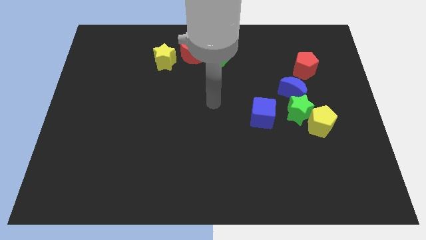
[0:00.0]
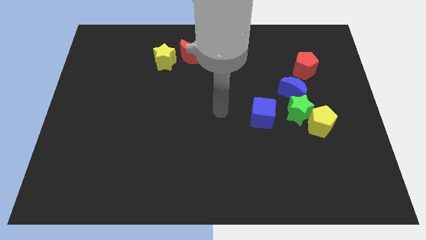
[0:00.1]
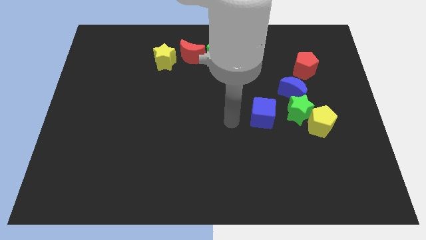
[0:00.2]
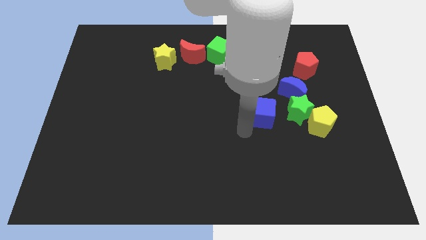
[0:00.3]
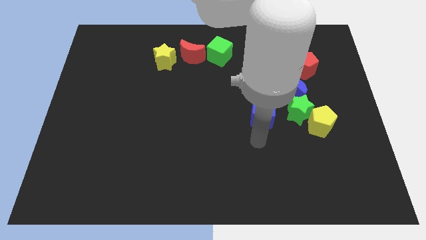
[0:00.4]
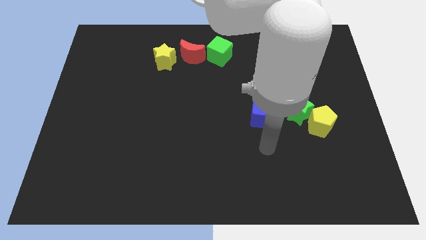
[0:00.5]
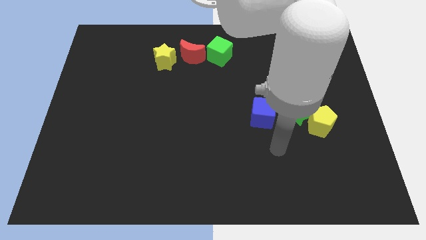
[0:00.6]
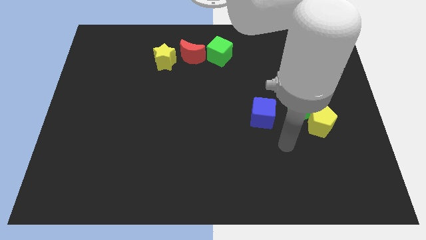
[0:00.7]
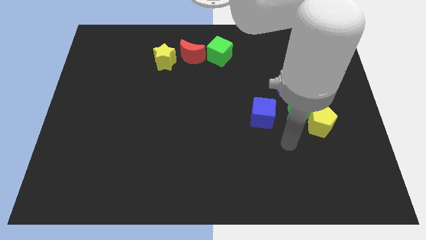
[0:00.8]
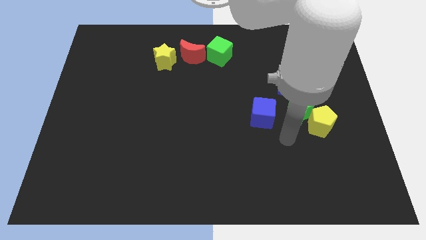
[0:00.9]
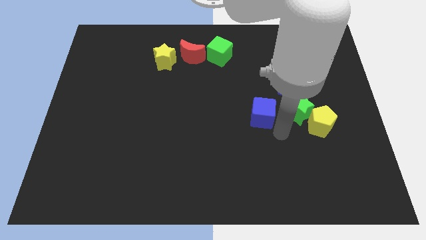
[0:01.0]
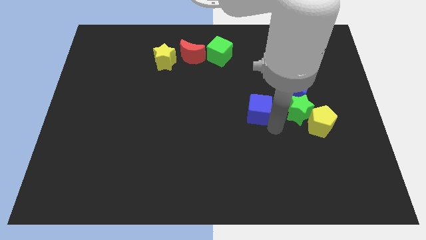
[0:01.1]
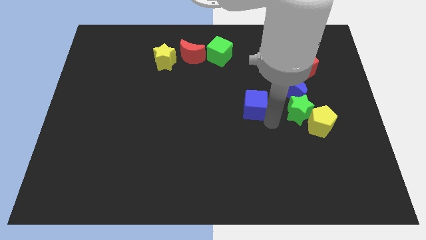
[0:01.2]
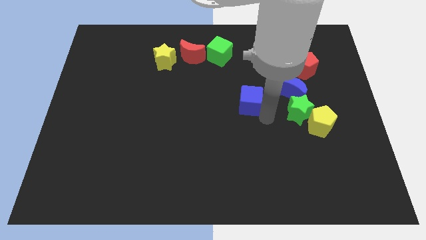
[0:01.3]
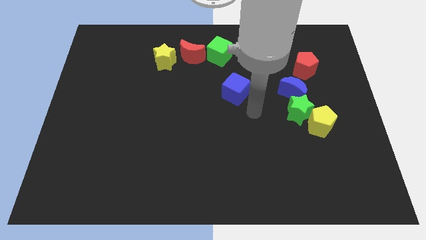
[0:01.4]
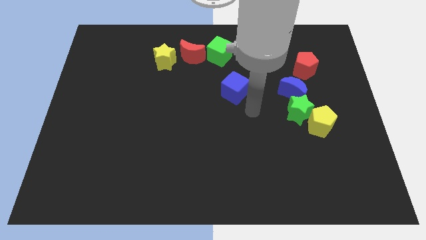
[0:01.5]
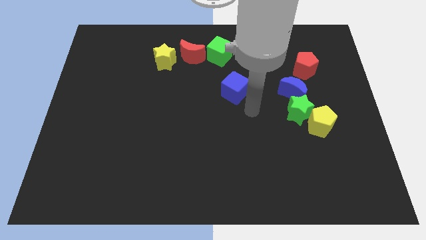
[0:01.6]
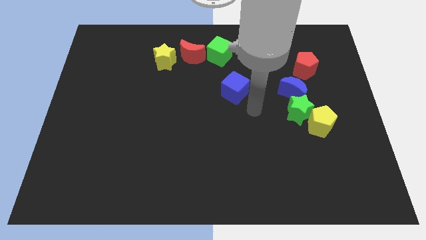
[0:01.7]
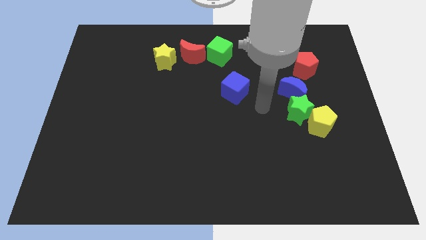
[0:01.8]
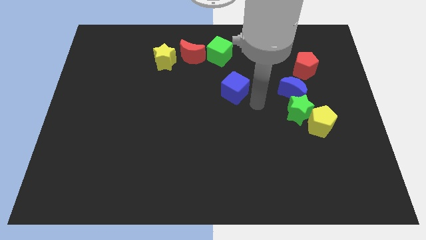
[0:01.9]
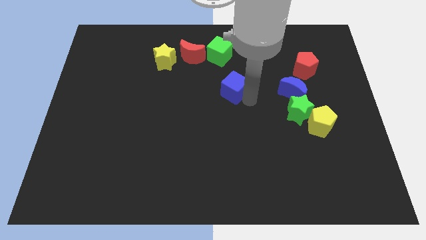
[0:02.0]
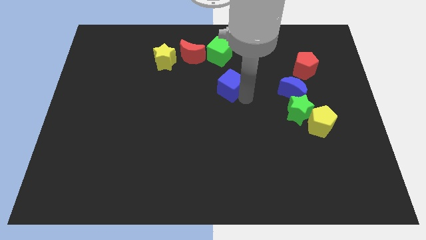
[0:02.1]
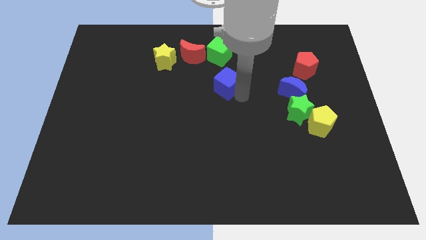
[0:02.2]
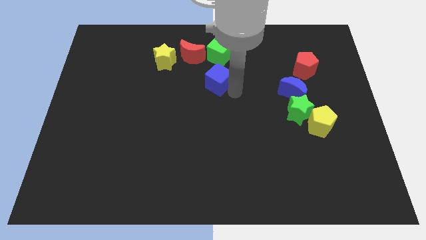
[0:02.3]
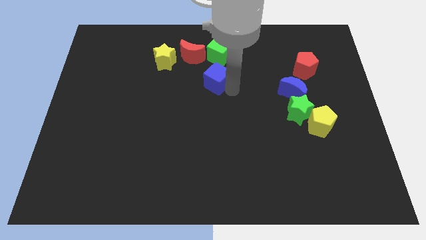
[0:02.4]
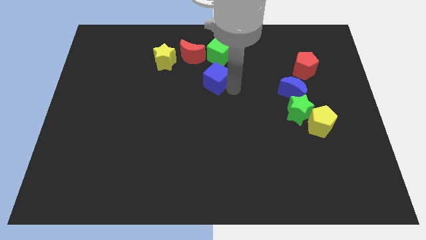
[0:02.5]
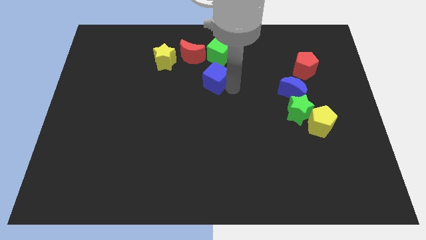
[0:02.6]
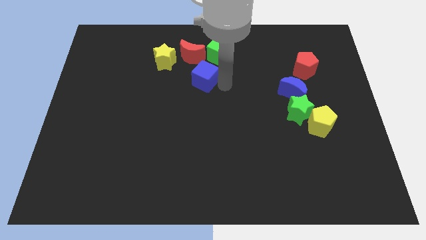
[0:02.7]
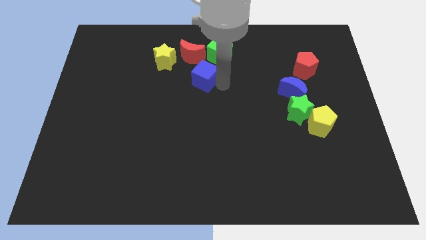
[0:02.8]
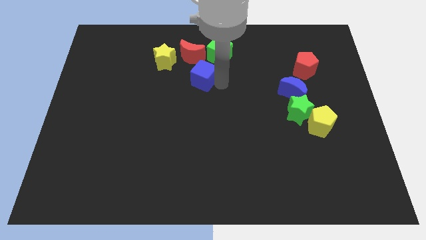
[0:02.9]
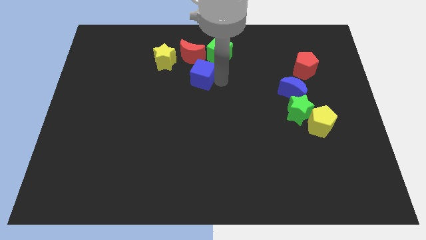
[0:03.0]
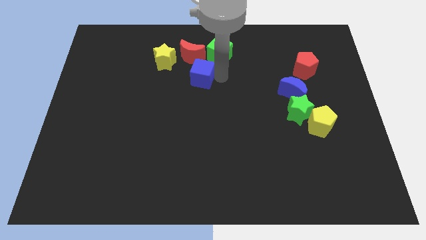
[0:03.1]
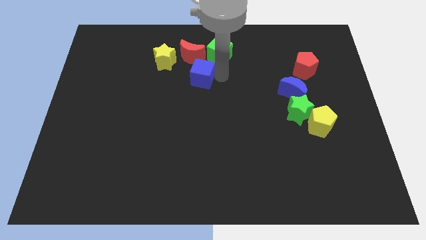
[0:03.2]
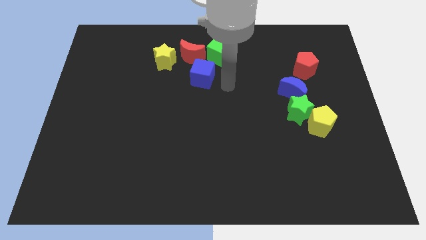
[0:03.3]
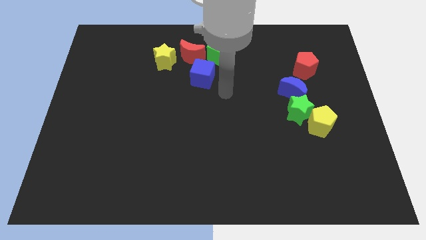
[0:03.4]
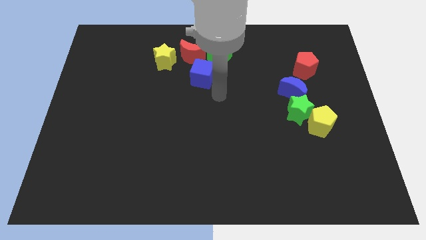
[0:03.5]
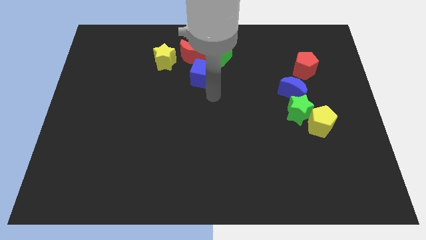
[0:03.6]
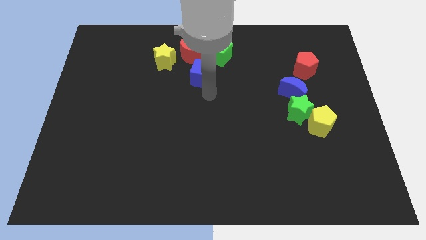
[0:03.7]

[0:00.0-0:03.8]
move the blue cube to the bottom side of the red moon

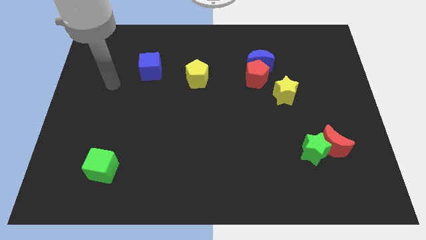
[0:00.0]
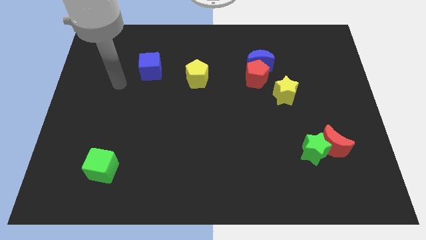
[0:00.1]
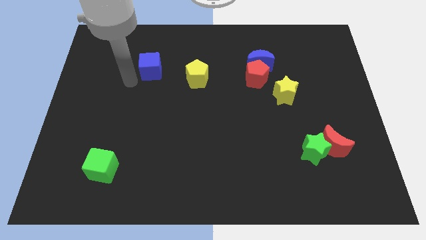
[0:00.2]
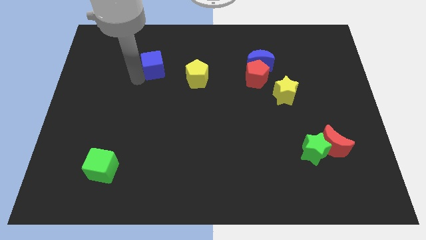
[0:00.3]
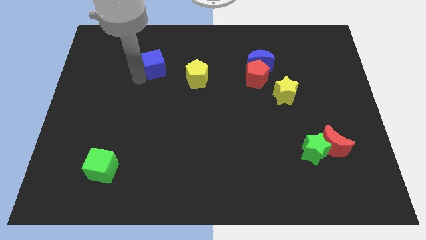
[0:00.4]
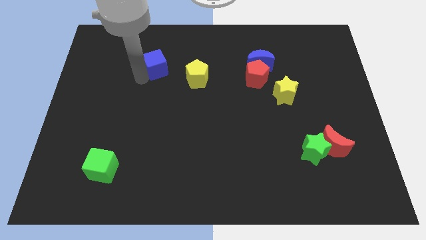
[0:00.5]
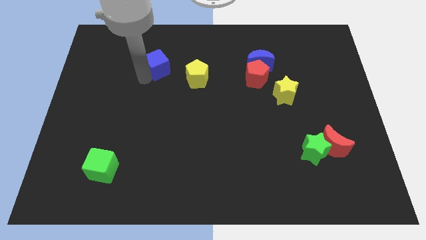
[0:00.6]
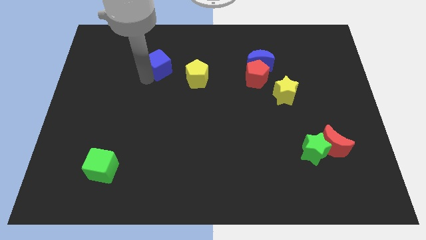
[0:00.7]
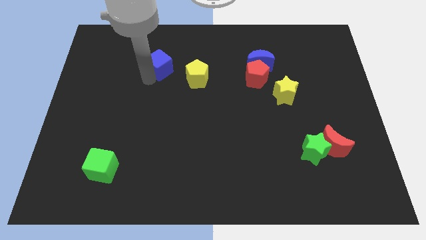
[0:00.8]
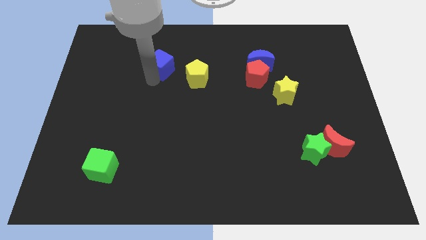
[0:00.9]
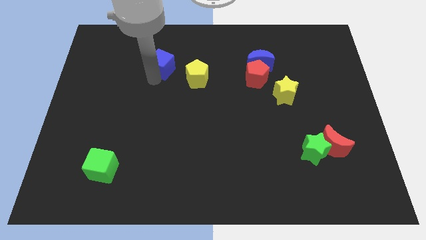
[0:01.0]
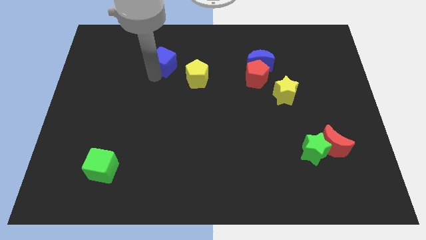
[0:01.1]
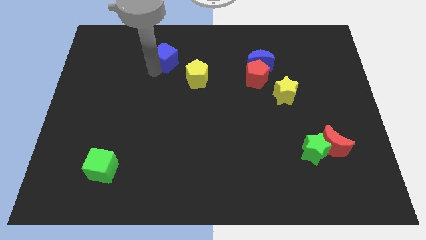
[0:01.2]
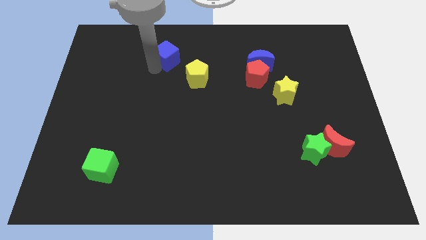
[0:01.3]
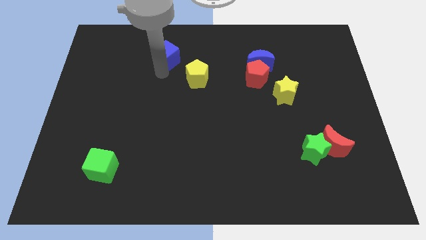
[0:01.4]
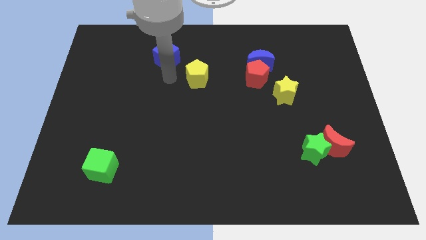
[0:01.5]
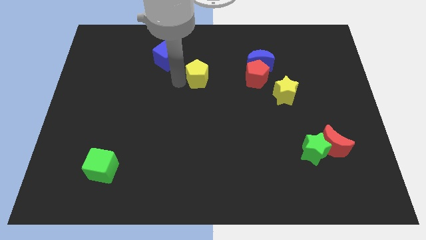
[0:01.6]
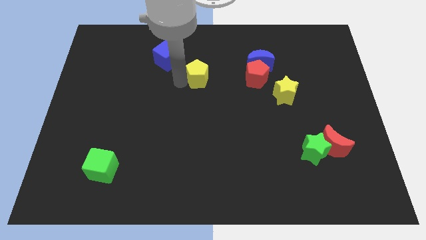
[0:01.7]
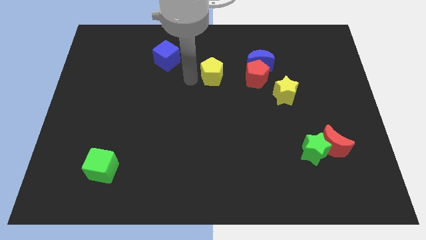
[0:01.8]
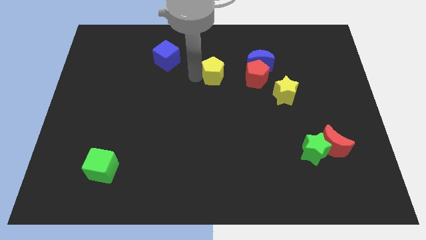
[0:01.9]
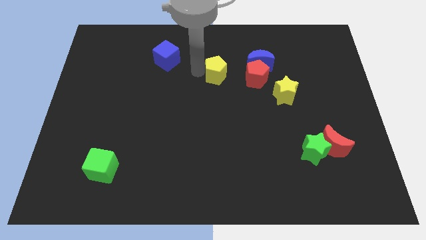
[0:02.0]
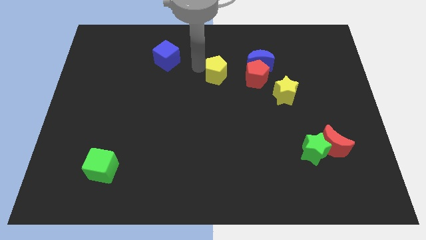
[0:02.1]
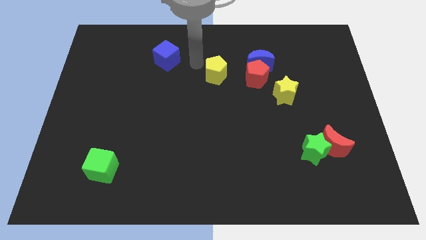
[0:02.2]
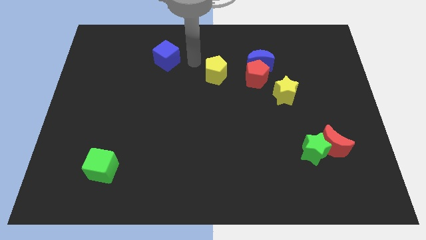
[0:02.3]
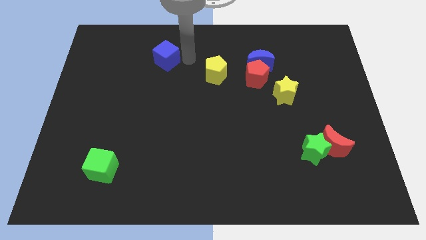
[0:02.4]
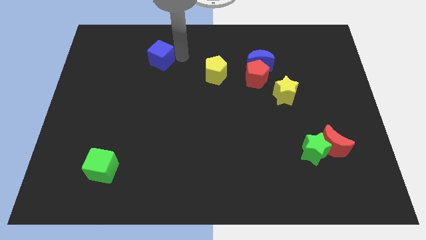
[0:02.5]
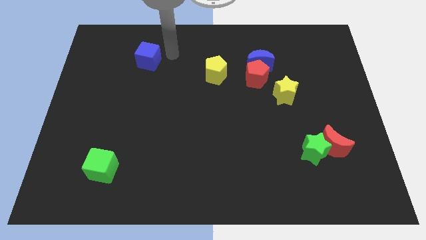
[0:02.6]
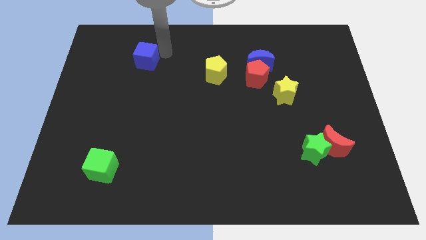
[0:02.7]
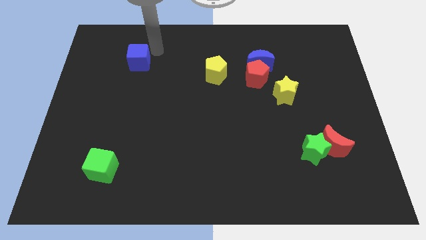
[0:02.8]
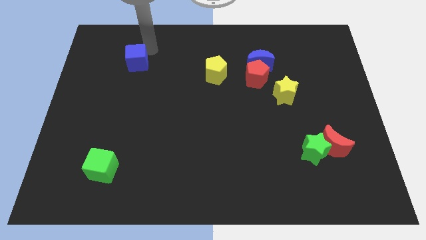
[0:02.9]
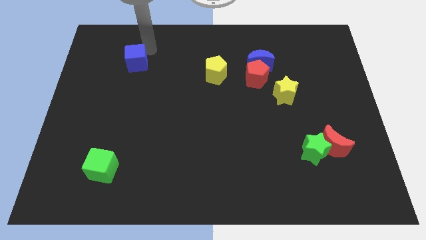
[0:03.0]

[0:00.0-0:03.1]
separate the yellow pentagon and the blue cube

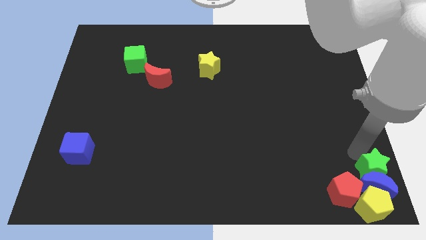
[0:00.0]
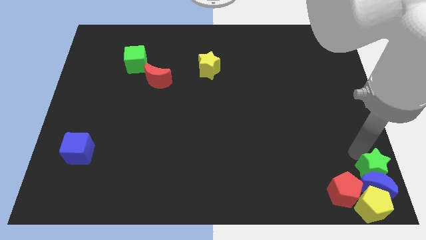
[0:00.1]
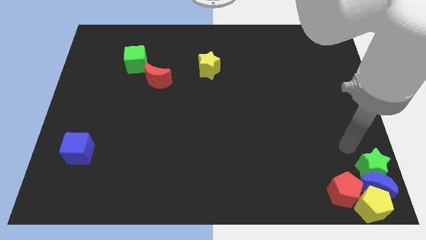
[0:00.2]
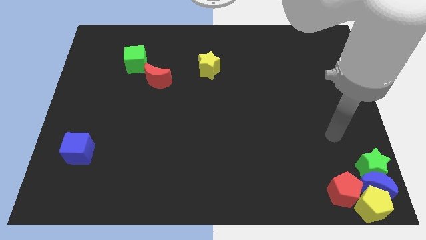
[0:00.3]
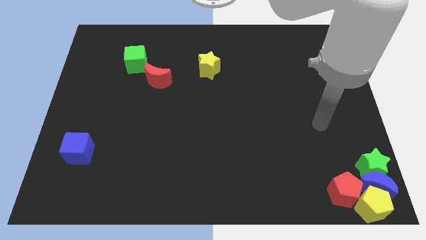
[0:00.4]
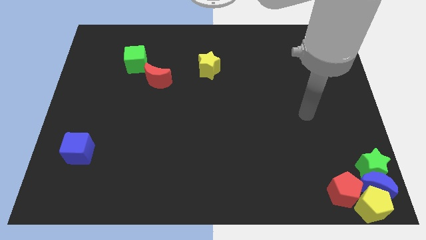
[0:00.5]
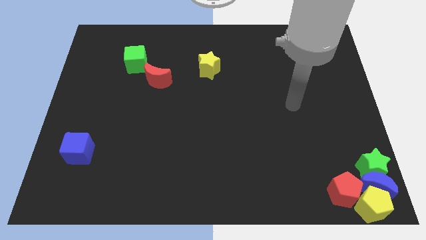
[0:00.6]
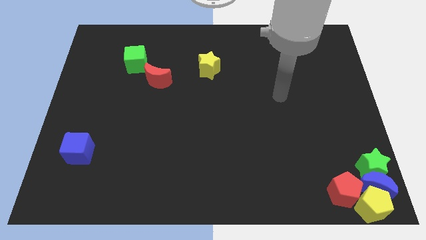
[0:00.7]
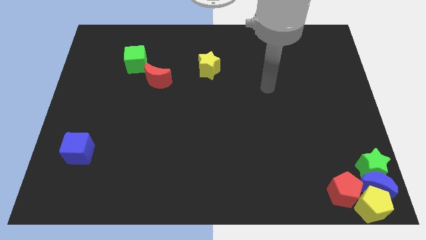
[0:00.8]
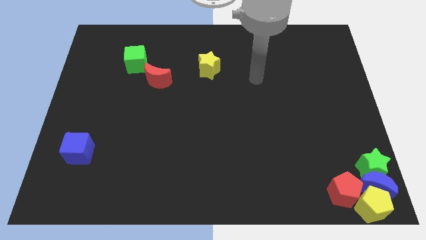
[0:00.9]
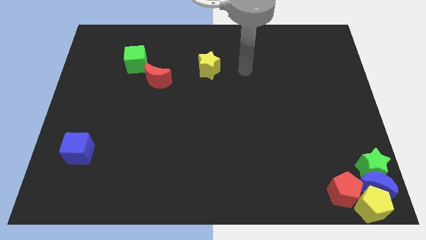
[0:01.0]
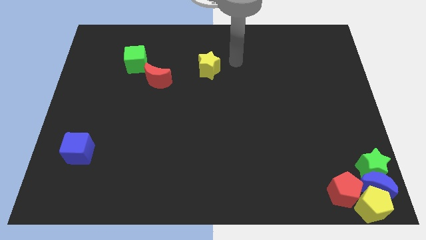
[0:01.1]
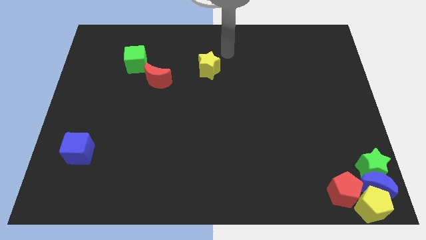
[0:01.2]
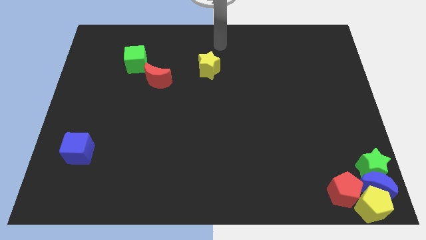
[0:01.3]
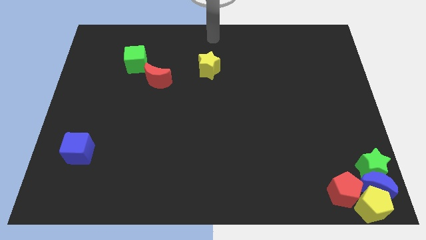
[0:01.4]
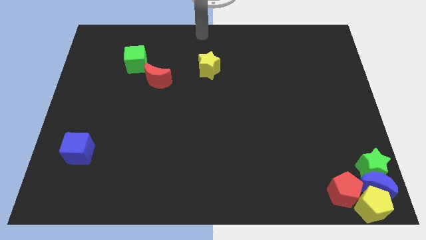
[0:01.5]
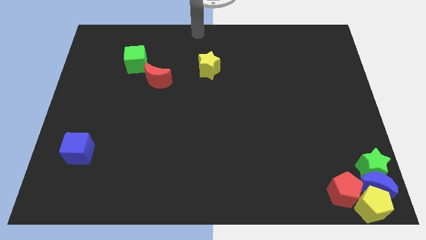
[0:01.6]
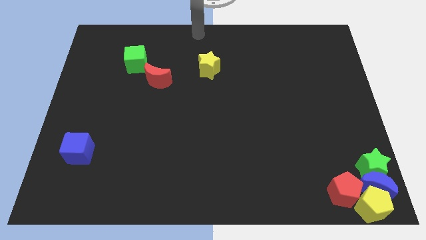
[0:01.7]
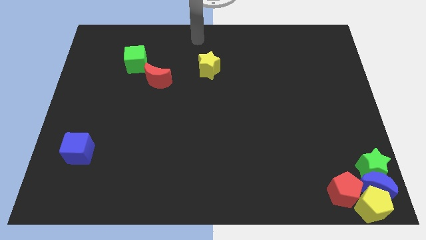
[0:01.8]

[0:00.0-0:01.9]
point your arm at the top center
